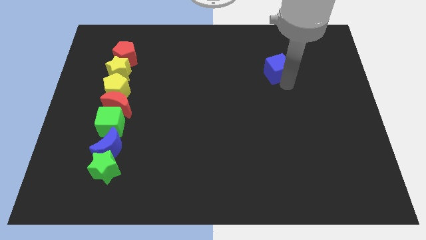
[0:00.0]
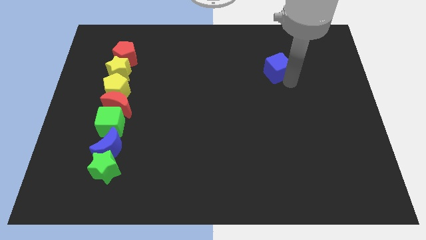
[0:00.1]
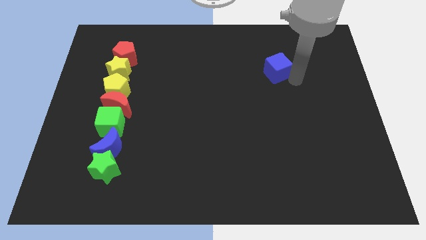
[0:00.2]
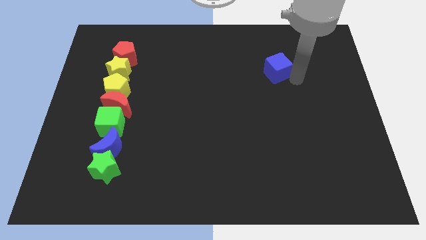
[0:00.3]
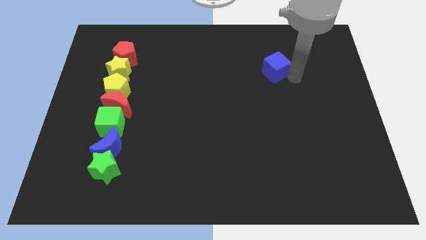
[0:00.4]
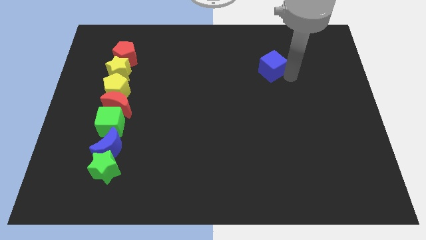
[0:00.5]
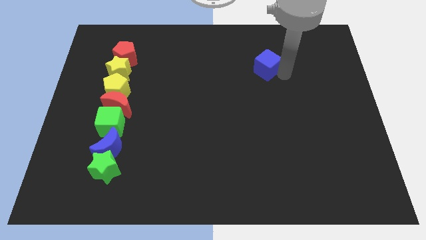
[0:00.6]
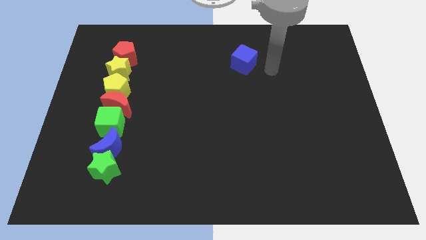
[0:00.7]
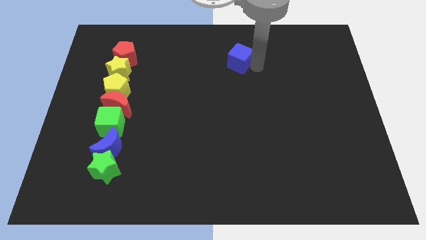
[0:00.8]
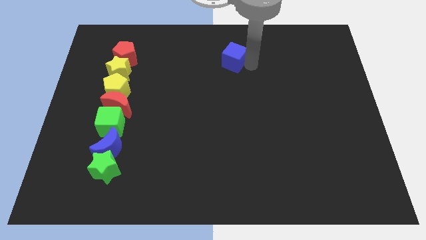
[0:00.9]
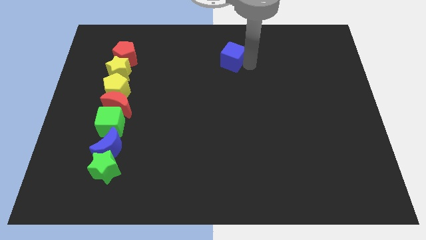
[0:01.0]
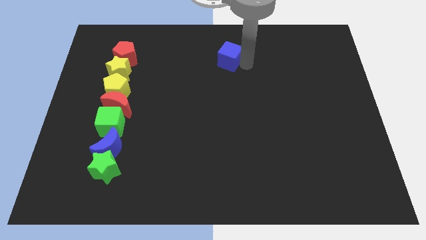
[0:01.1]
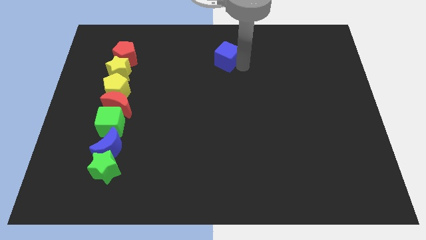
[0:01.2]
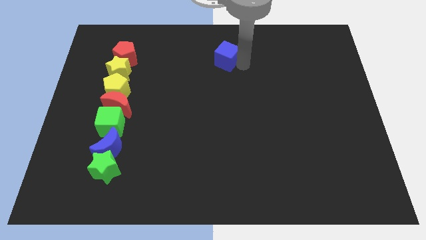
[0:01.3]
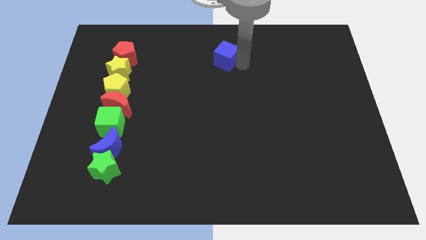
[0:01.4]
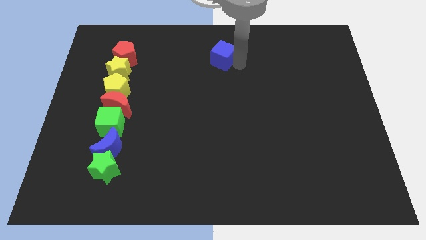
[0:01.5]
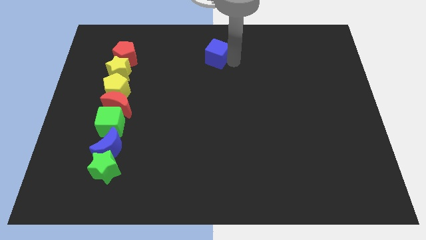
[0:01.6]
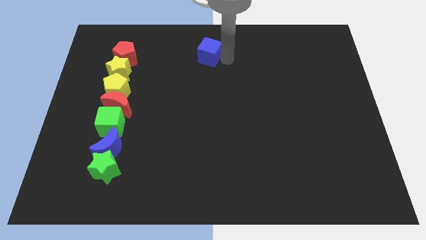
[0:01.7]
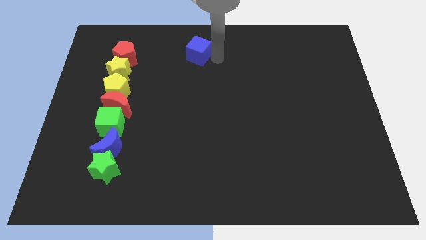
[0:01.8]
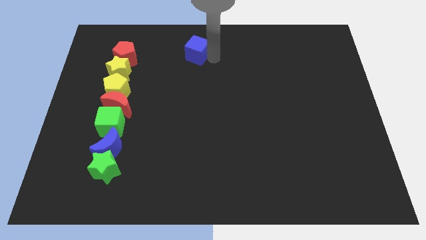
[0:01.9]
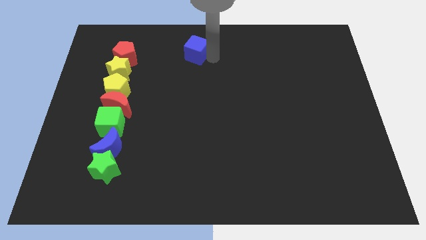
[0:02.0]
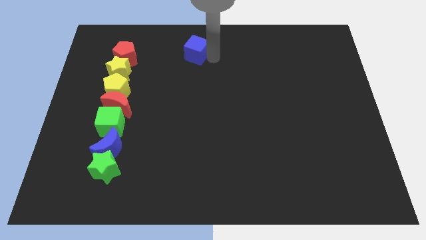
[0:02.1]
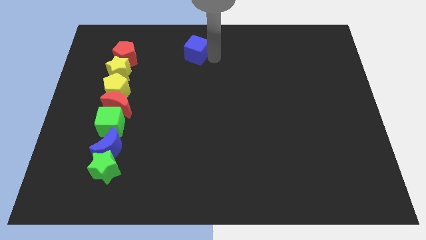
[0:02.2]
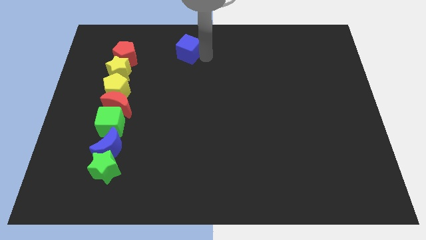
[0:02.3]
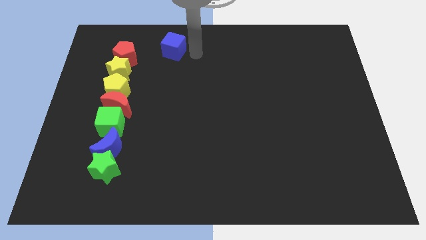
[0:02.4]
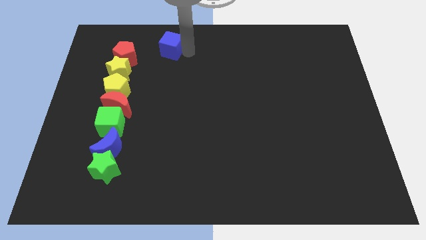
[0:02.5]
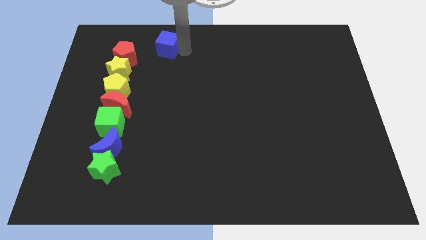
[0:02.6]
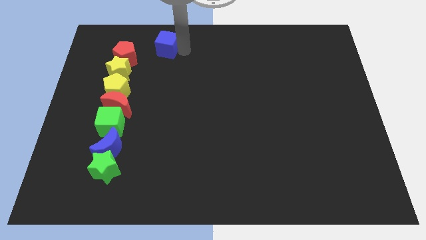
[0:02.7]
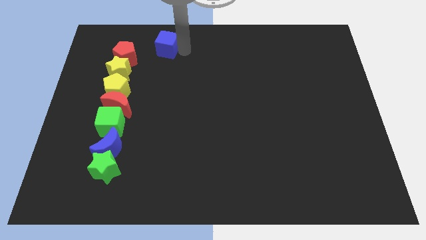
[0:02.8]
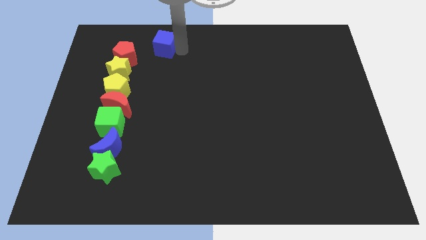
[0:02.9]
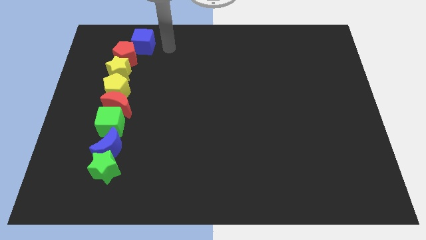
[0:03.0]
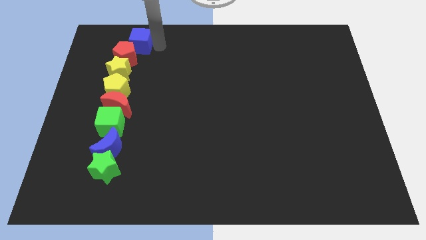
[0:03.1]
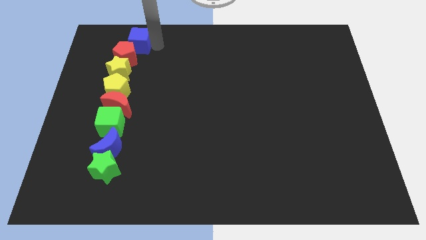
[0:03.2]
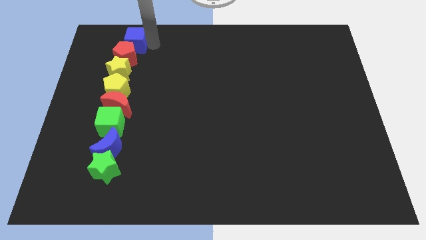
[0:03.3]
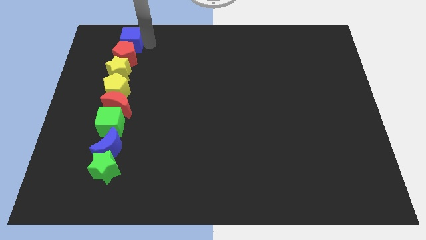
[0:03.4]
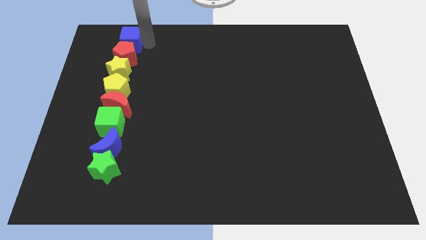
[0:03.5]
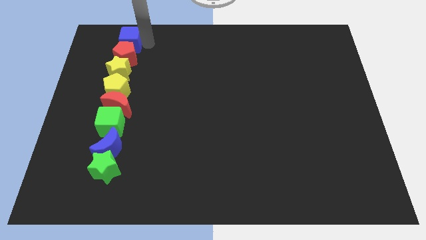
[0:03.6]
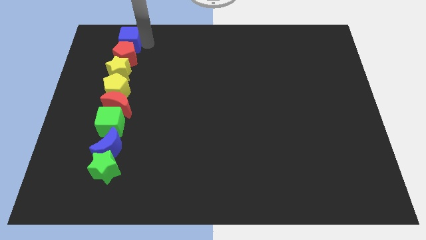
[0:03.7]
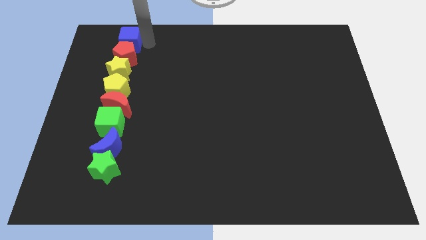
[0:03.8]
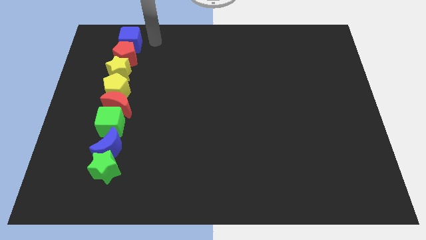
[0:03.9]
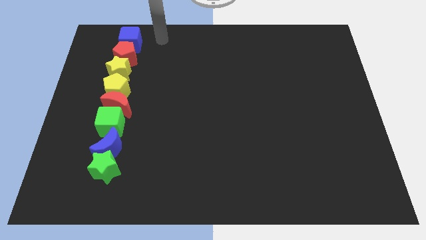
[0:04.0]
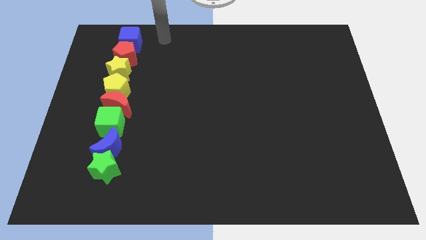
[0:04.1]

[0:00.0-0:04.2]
place blue cube above the red pentagon

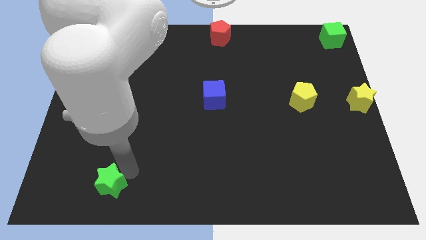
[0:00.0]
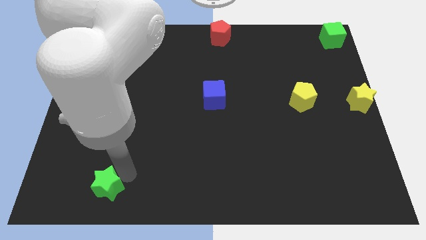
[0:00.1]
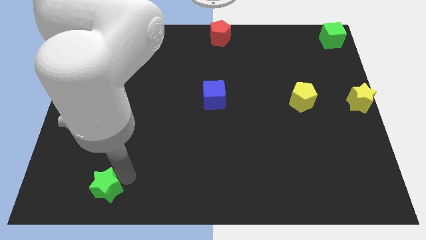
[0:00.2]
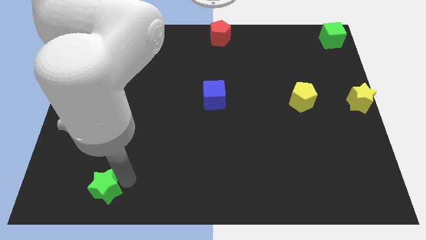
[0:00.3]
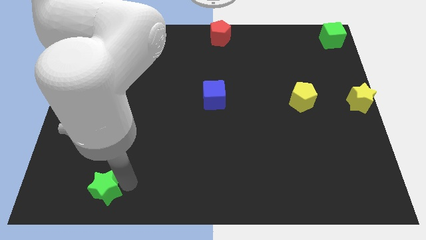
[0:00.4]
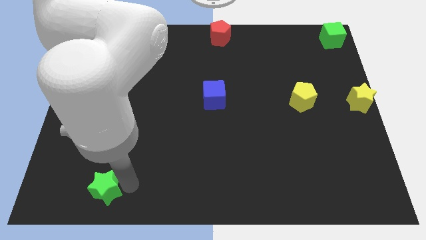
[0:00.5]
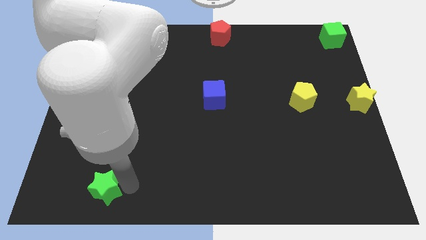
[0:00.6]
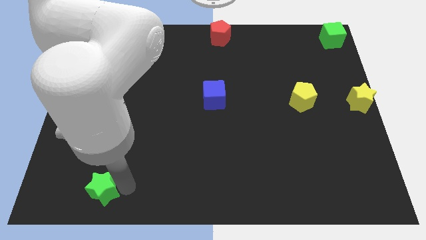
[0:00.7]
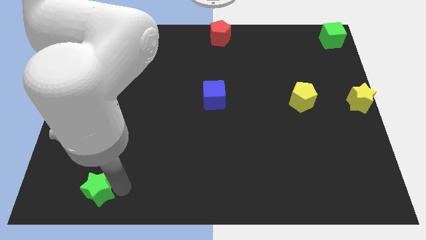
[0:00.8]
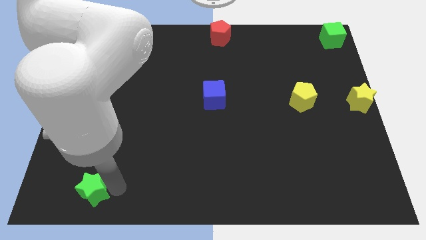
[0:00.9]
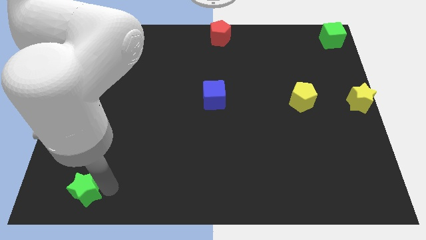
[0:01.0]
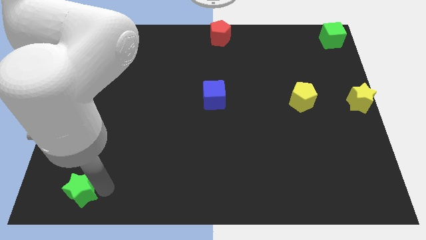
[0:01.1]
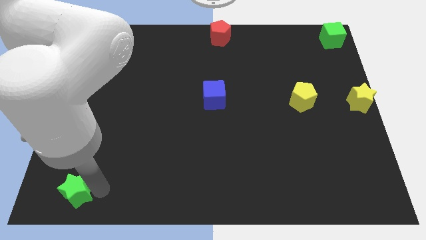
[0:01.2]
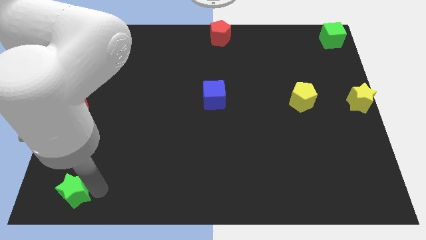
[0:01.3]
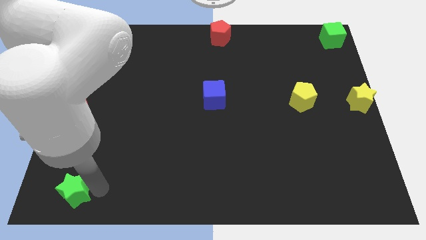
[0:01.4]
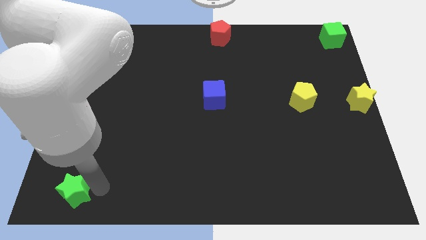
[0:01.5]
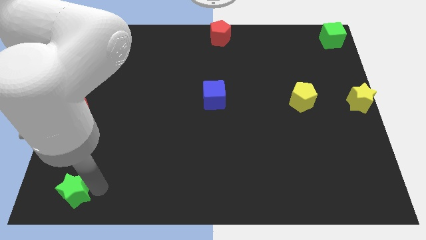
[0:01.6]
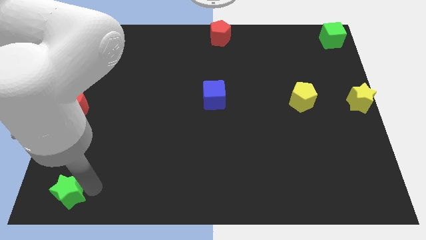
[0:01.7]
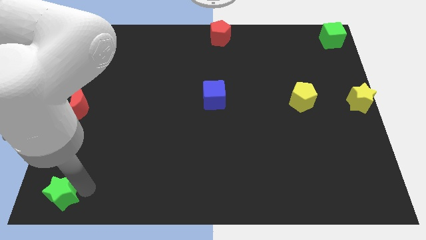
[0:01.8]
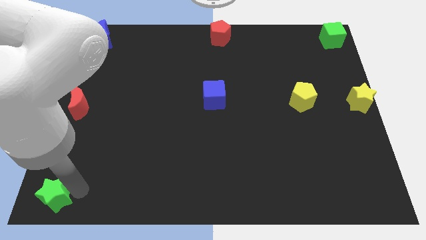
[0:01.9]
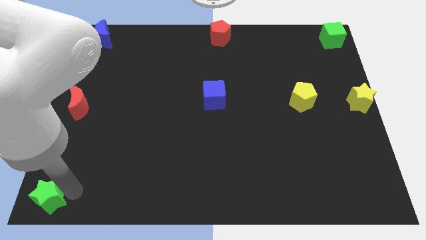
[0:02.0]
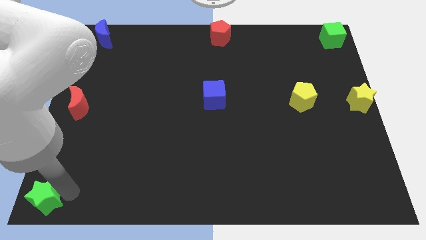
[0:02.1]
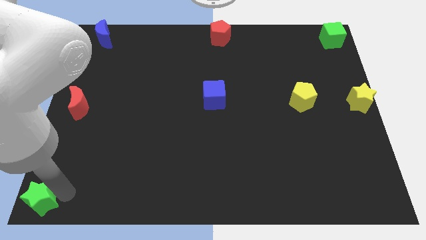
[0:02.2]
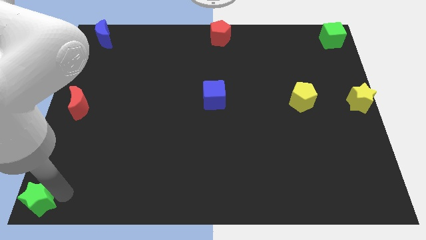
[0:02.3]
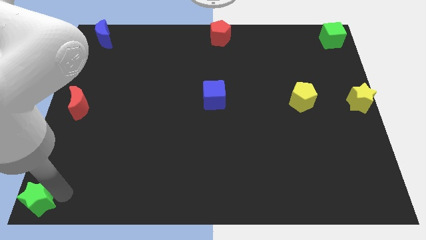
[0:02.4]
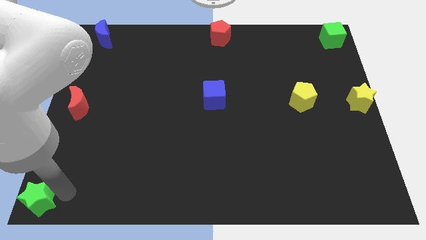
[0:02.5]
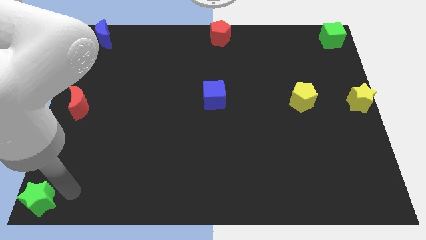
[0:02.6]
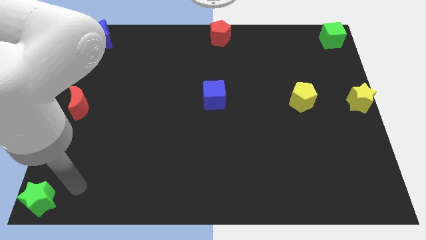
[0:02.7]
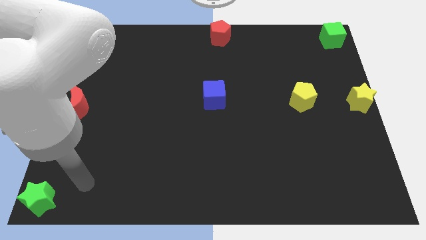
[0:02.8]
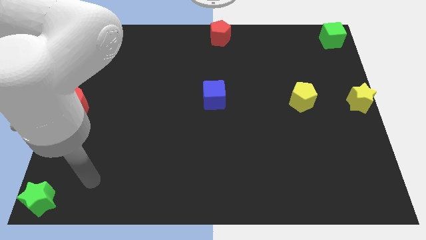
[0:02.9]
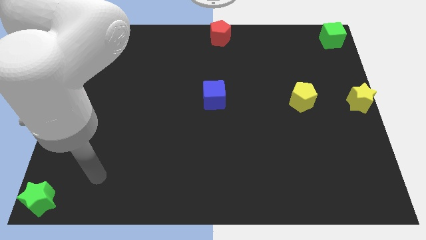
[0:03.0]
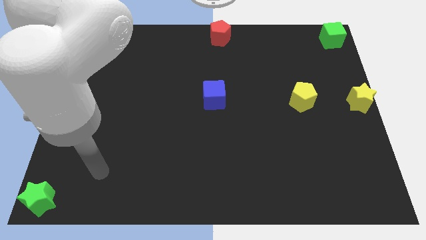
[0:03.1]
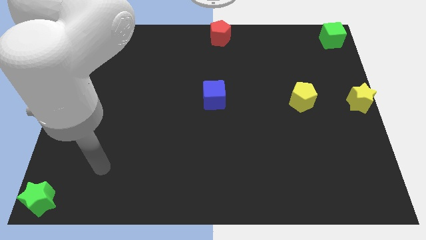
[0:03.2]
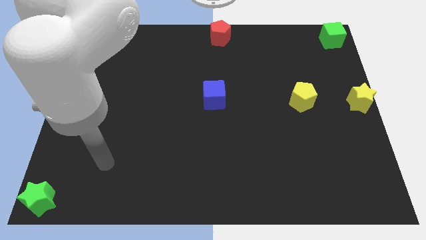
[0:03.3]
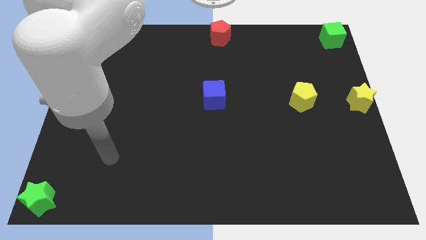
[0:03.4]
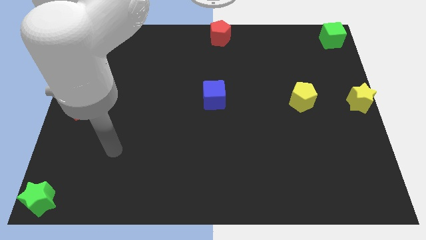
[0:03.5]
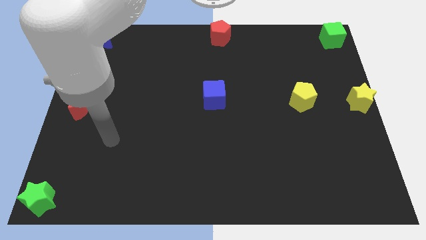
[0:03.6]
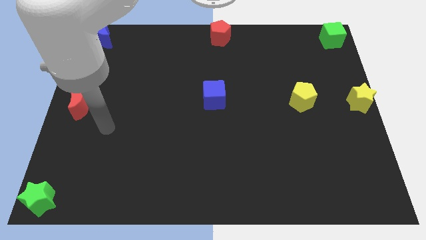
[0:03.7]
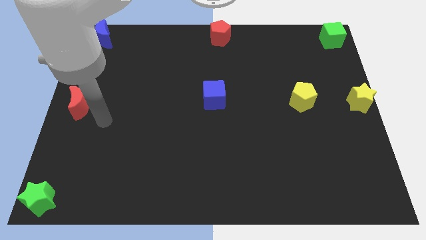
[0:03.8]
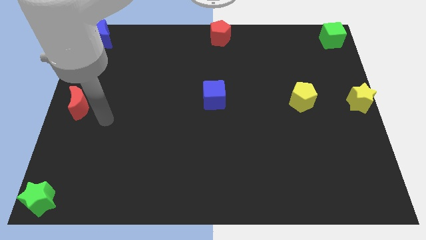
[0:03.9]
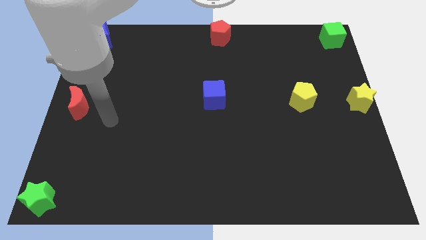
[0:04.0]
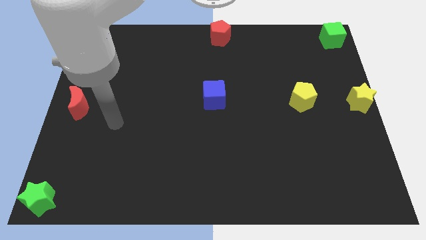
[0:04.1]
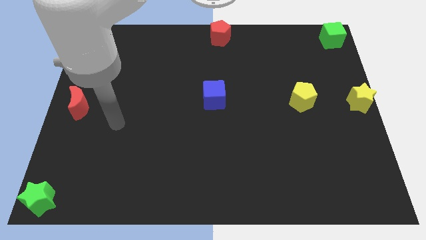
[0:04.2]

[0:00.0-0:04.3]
place the green star to the bottom left of the board

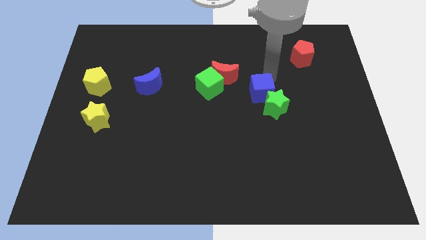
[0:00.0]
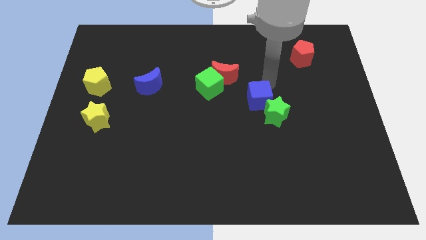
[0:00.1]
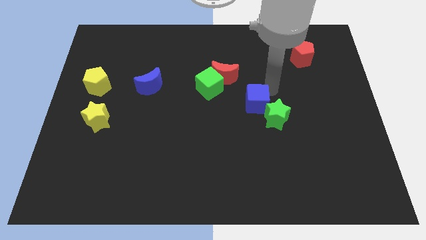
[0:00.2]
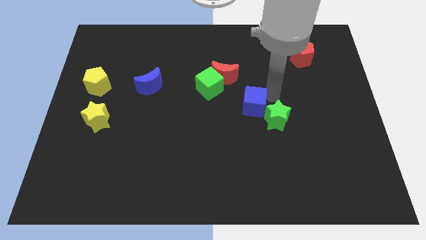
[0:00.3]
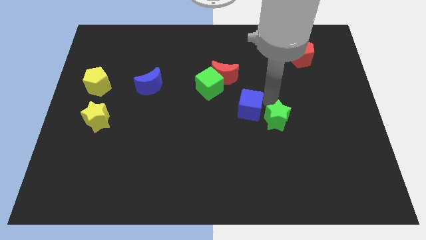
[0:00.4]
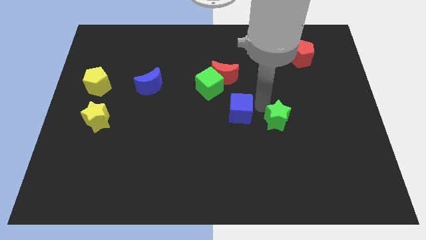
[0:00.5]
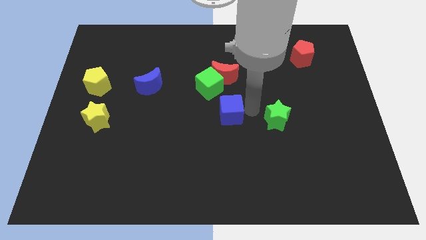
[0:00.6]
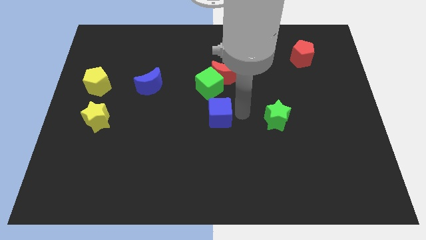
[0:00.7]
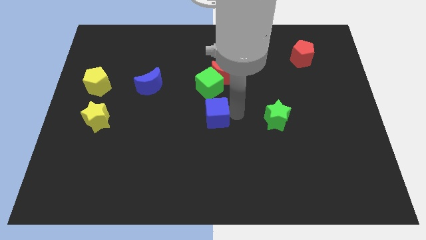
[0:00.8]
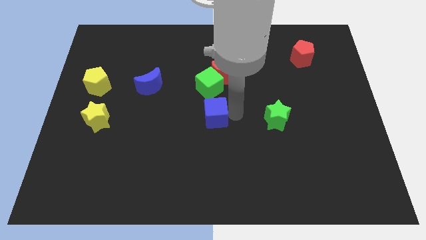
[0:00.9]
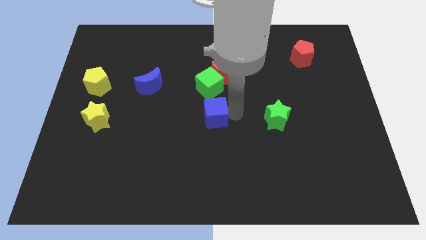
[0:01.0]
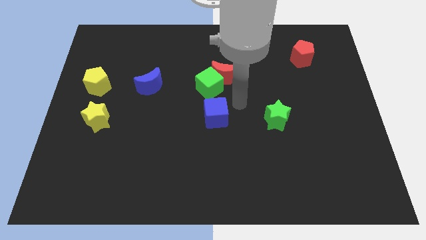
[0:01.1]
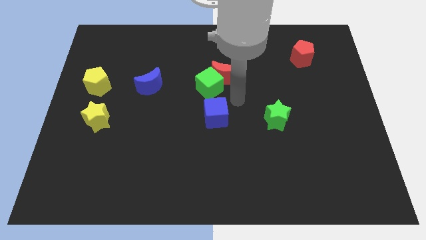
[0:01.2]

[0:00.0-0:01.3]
move blue cube below the green cube
